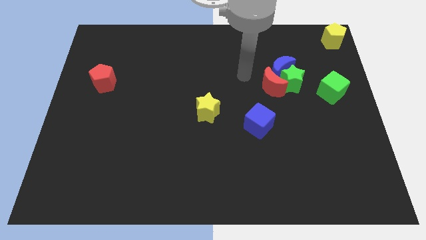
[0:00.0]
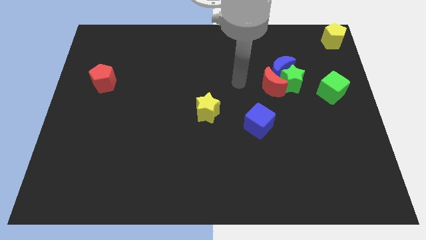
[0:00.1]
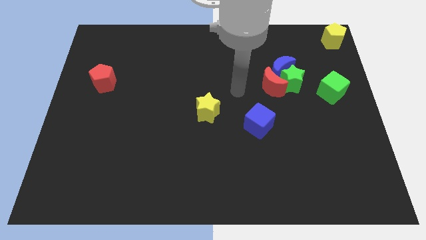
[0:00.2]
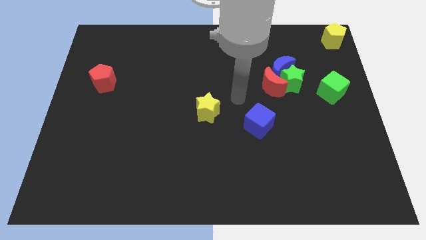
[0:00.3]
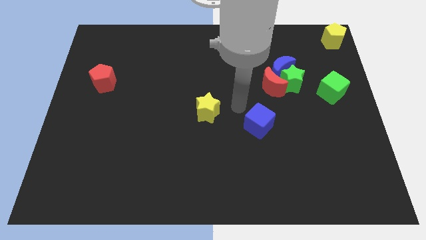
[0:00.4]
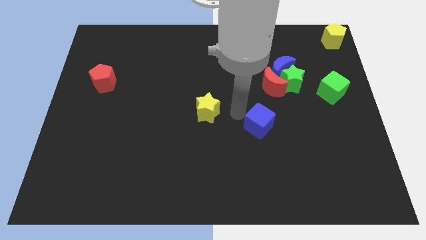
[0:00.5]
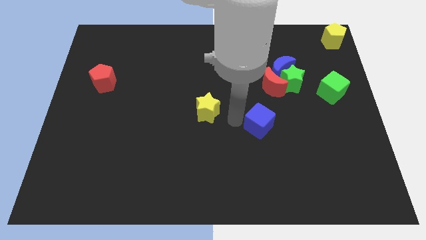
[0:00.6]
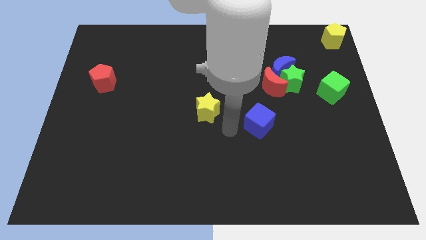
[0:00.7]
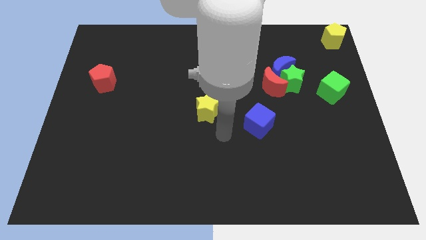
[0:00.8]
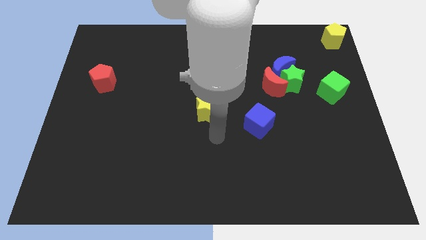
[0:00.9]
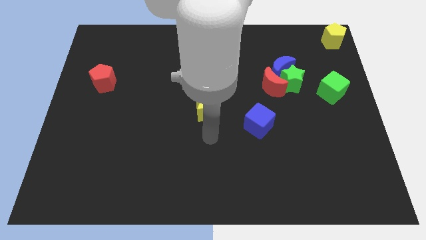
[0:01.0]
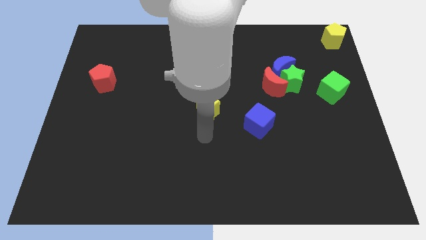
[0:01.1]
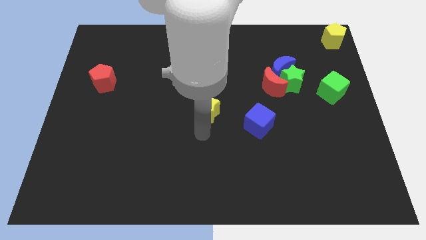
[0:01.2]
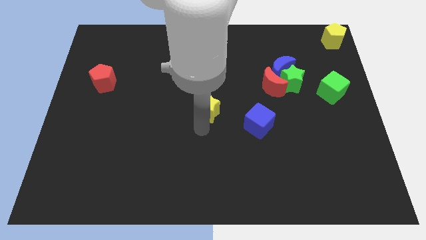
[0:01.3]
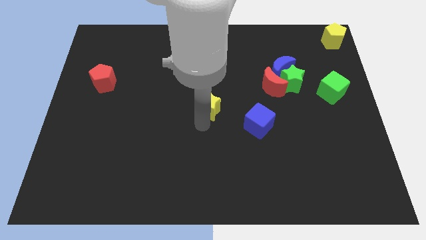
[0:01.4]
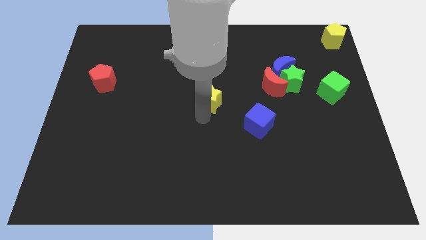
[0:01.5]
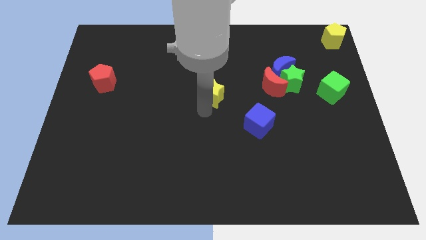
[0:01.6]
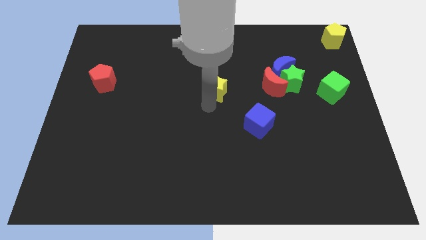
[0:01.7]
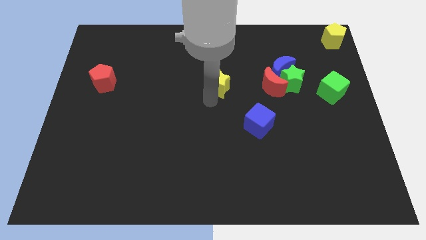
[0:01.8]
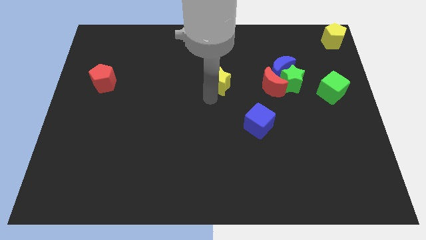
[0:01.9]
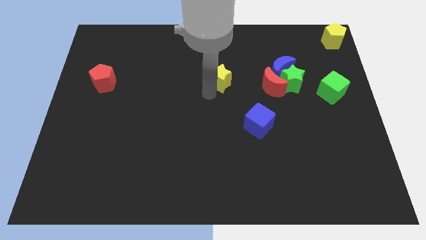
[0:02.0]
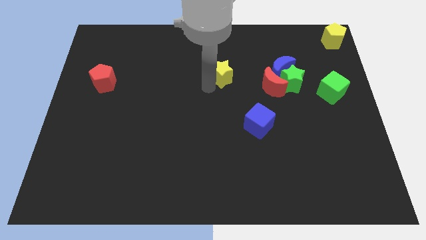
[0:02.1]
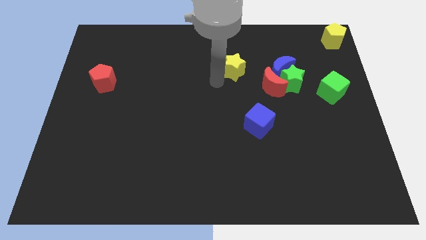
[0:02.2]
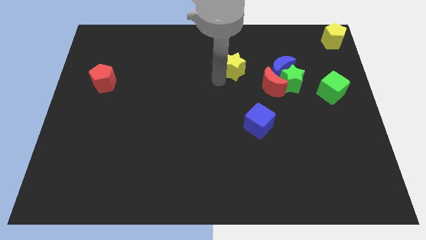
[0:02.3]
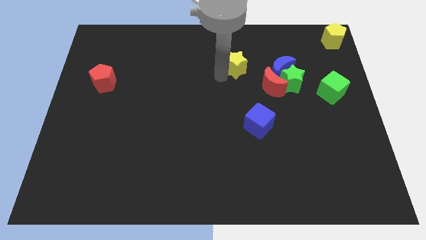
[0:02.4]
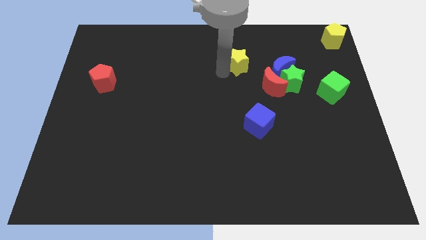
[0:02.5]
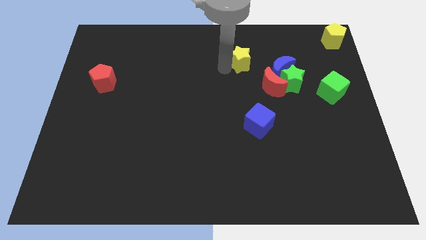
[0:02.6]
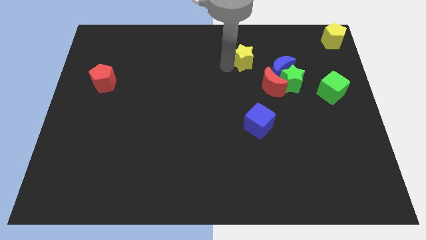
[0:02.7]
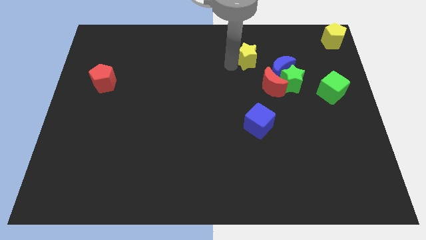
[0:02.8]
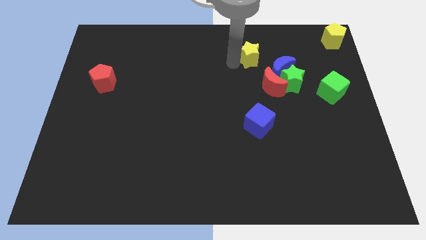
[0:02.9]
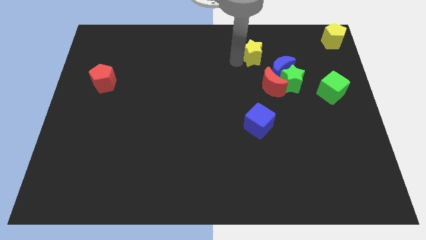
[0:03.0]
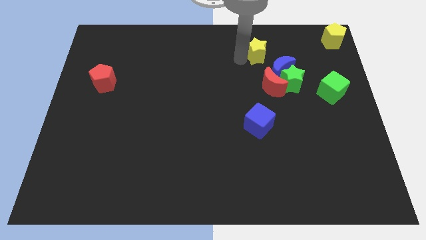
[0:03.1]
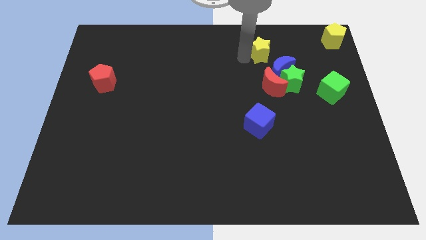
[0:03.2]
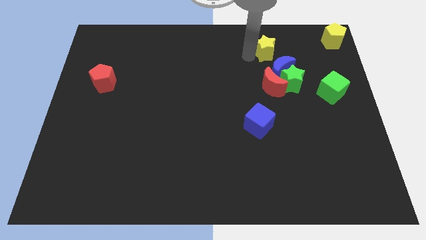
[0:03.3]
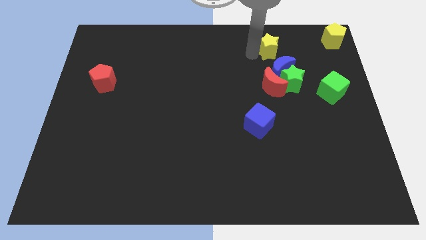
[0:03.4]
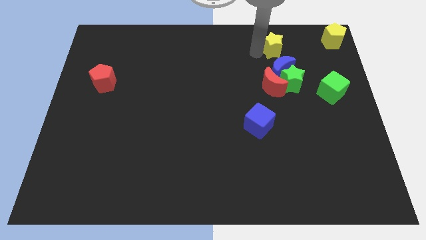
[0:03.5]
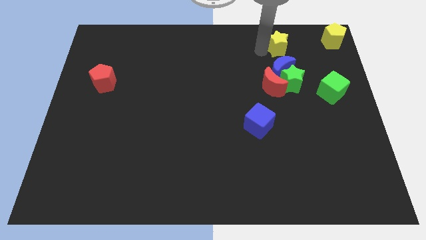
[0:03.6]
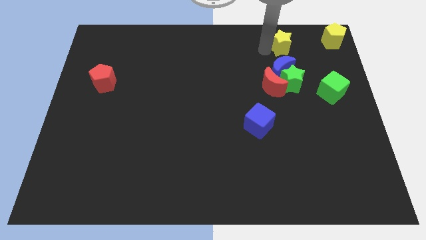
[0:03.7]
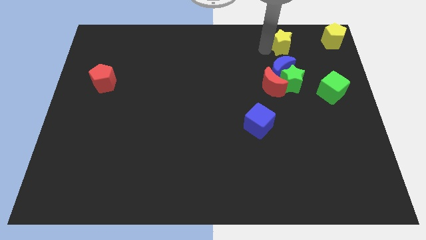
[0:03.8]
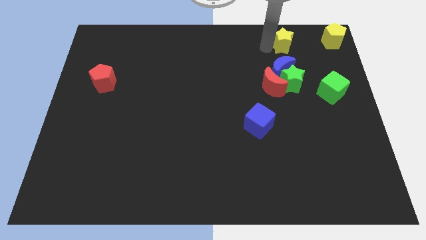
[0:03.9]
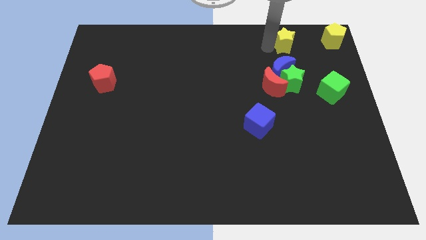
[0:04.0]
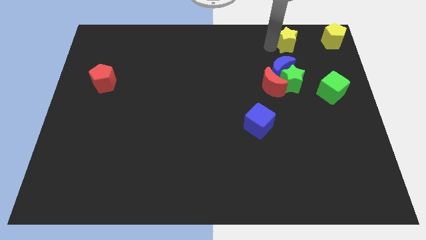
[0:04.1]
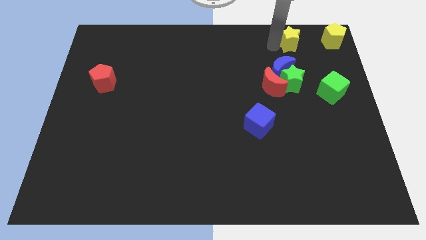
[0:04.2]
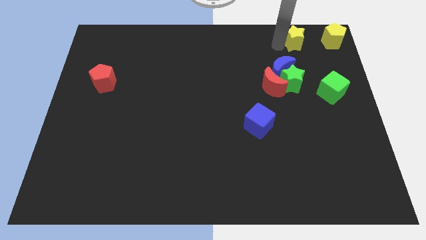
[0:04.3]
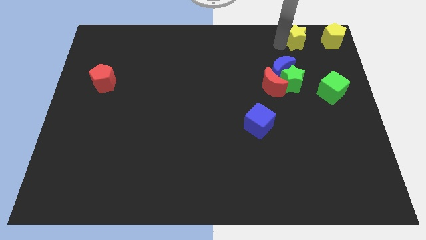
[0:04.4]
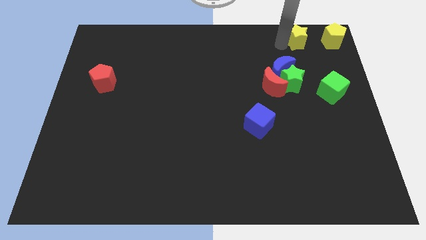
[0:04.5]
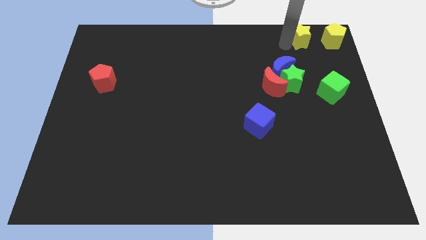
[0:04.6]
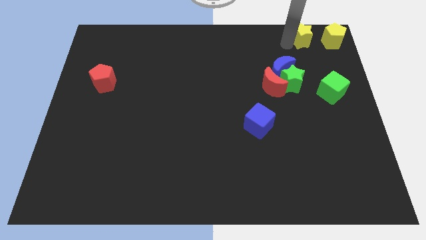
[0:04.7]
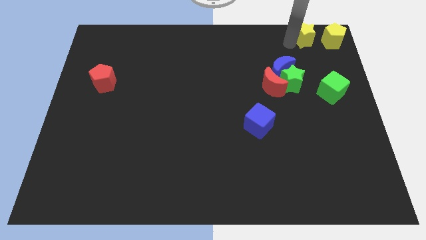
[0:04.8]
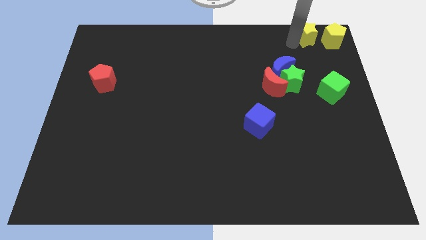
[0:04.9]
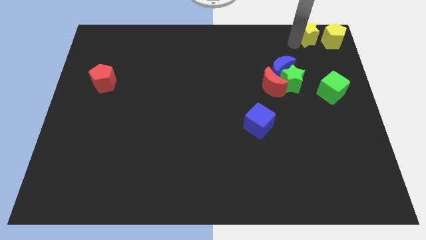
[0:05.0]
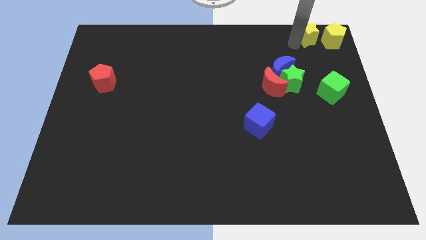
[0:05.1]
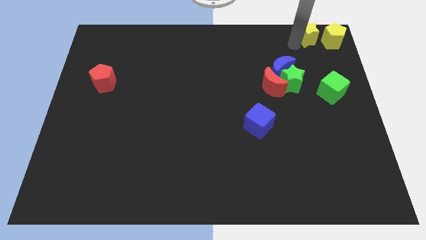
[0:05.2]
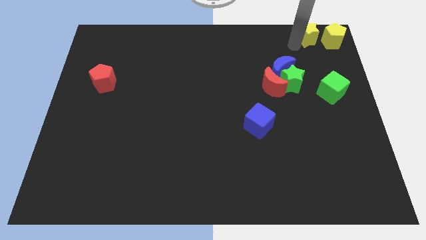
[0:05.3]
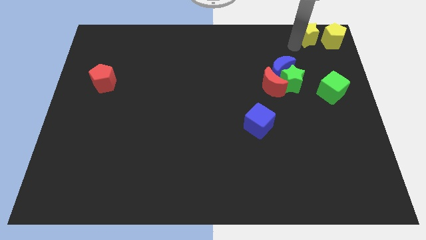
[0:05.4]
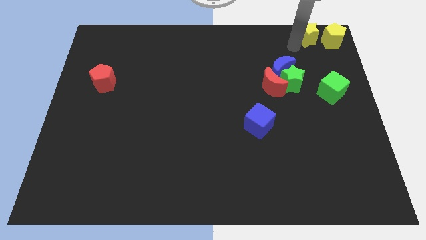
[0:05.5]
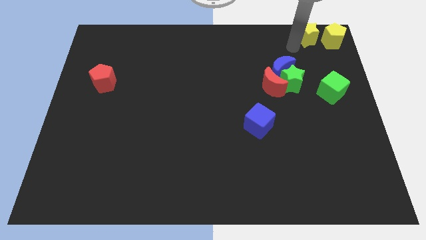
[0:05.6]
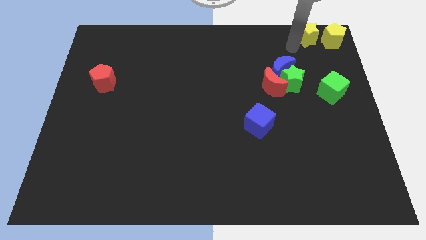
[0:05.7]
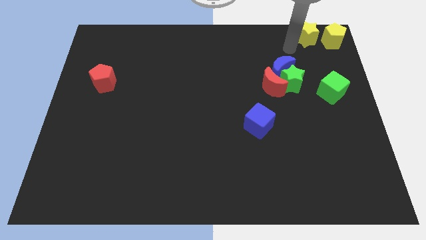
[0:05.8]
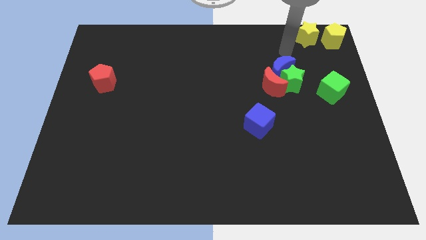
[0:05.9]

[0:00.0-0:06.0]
move the yellow star towards the left of the yellow pentagon

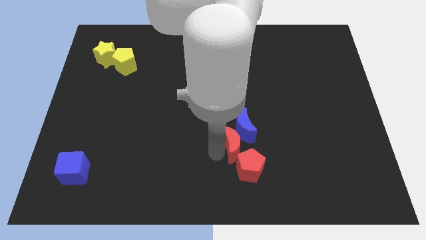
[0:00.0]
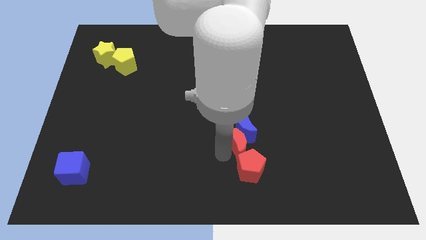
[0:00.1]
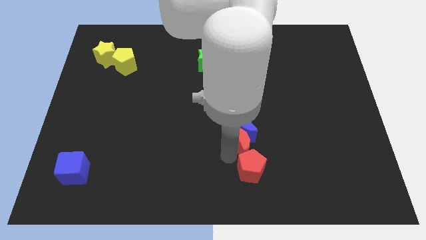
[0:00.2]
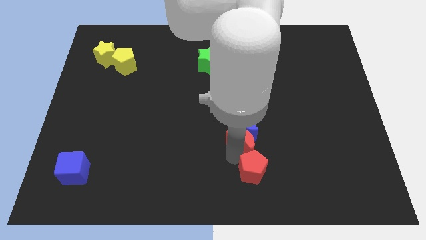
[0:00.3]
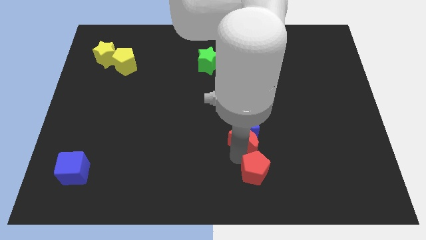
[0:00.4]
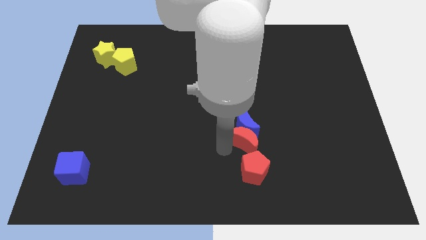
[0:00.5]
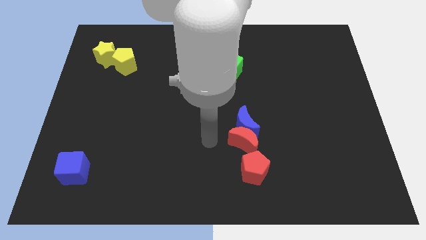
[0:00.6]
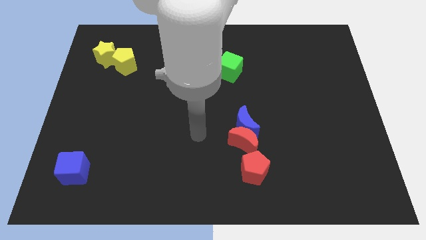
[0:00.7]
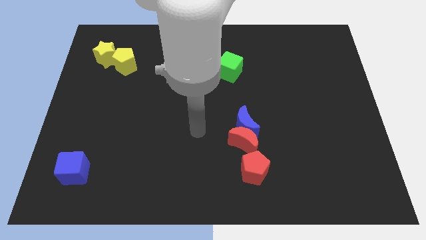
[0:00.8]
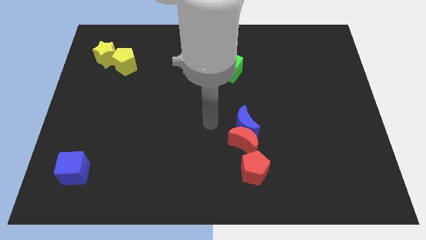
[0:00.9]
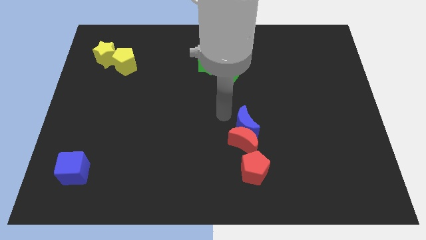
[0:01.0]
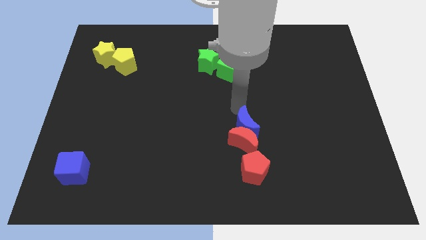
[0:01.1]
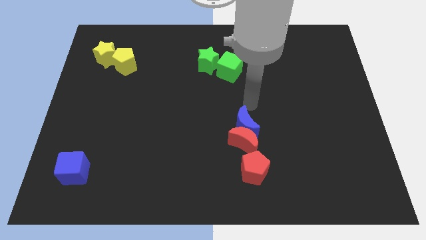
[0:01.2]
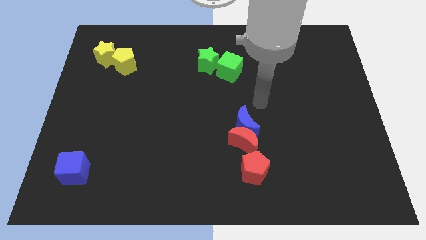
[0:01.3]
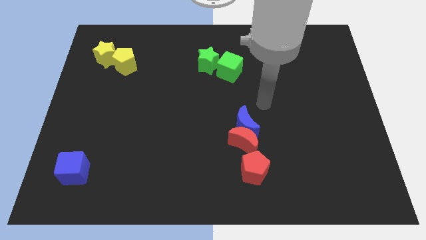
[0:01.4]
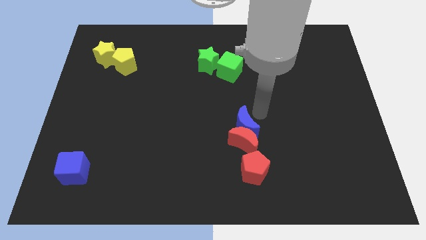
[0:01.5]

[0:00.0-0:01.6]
place the arm near the blue moon

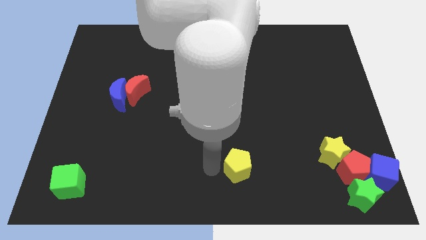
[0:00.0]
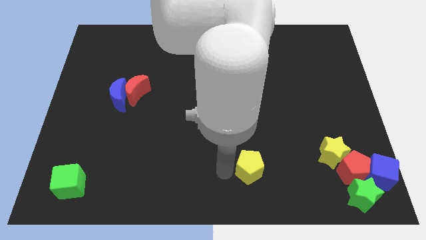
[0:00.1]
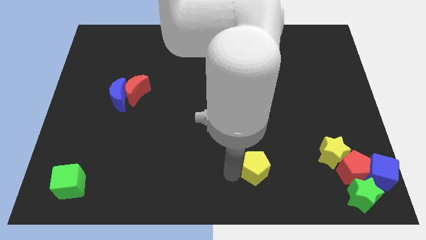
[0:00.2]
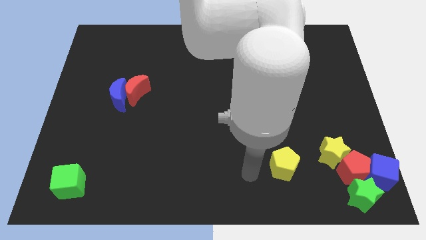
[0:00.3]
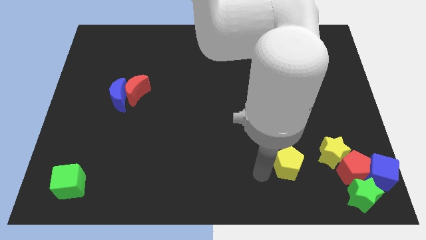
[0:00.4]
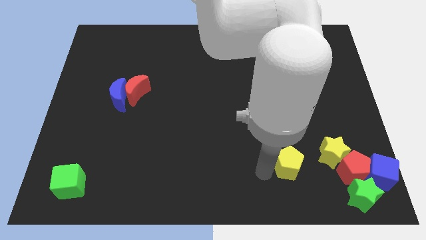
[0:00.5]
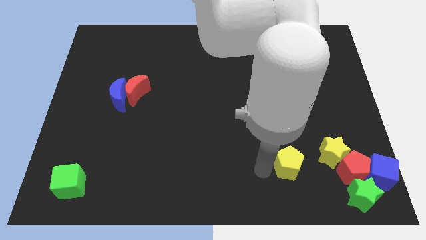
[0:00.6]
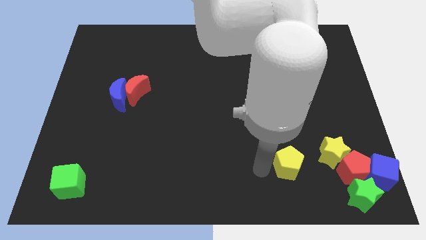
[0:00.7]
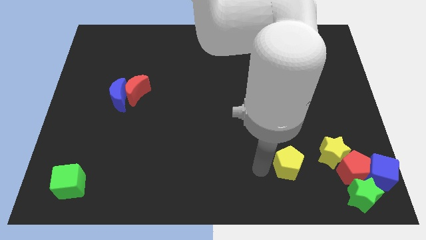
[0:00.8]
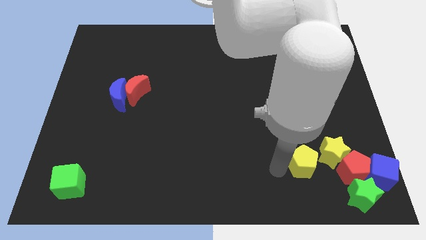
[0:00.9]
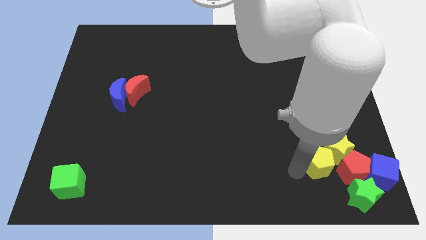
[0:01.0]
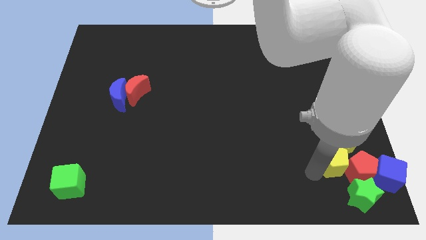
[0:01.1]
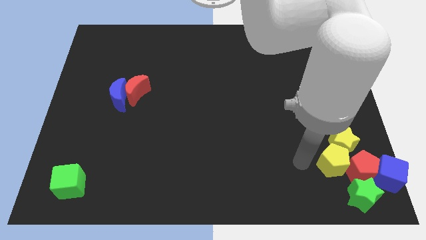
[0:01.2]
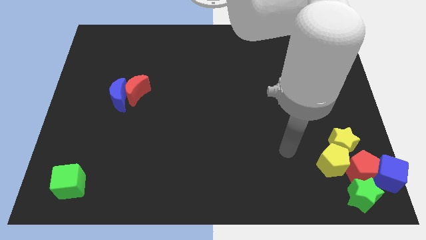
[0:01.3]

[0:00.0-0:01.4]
place the yellow pentagon diagonal to the yellow star
